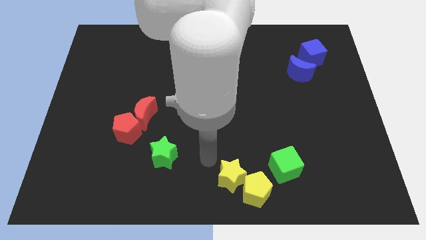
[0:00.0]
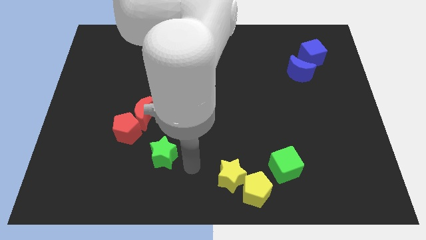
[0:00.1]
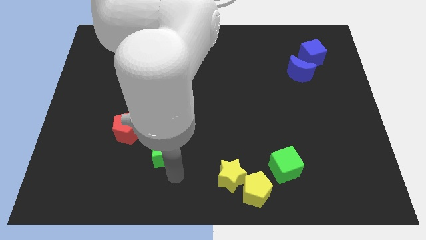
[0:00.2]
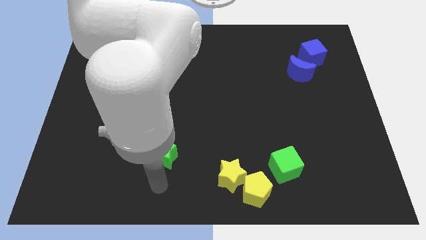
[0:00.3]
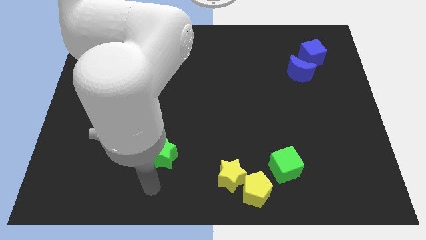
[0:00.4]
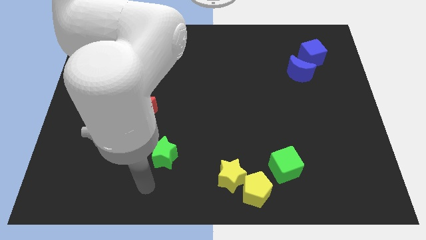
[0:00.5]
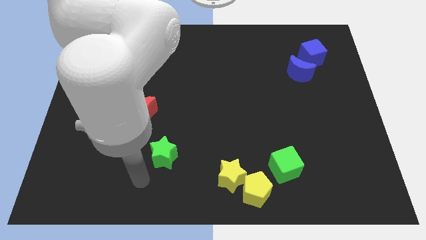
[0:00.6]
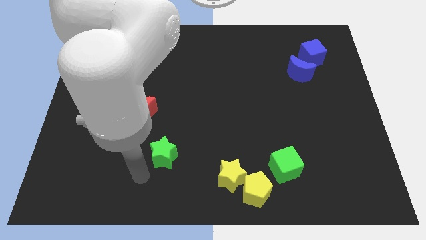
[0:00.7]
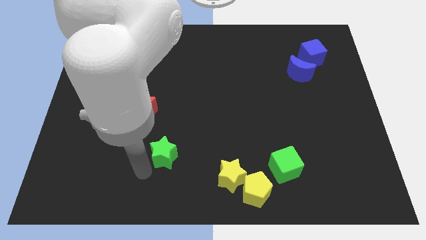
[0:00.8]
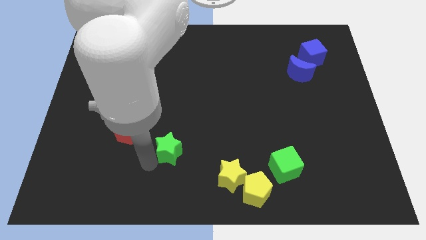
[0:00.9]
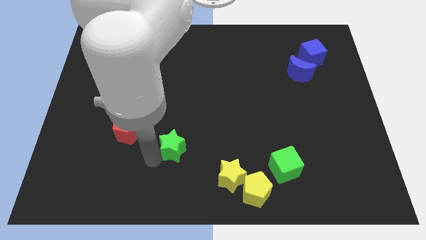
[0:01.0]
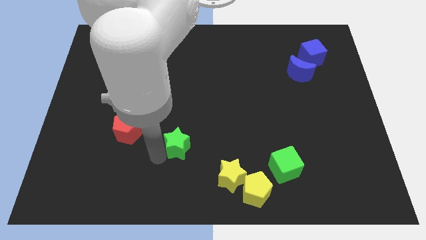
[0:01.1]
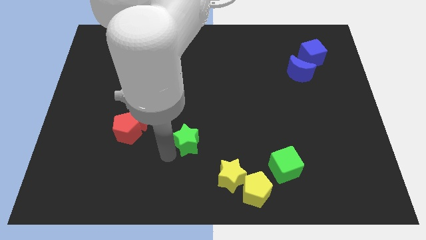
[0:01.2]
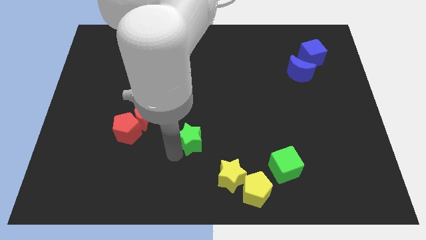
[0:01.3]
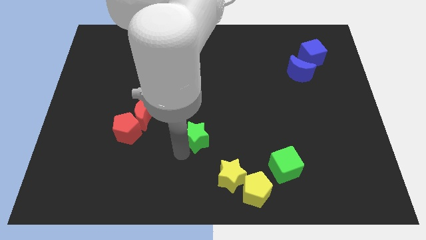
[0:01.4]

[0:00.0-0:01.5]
put the green star between the yellow star and red moon

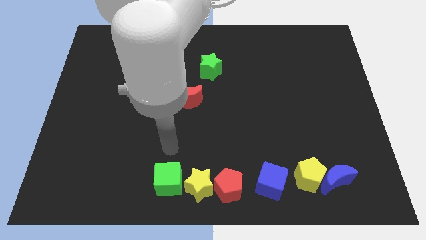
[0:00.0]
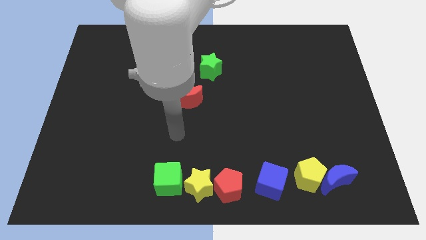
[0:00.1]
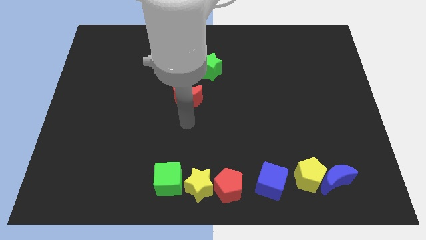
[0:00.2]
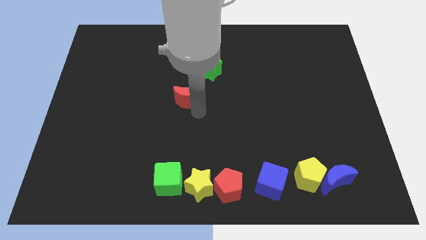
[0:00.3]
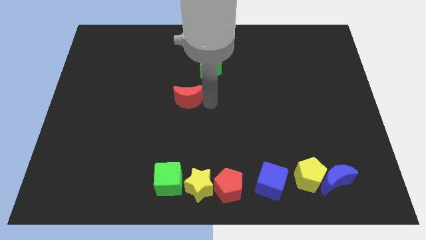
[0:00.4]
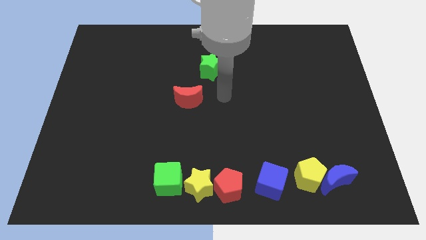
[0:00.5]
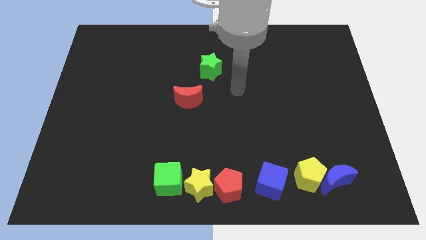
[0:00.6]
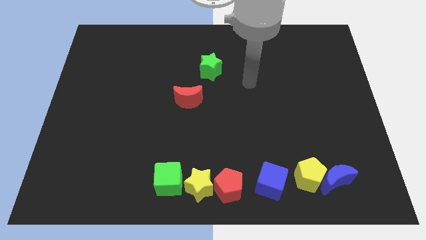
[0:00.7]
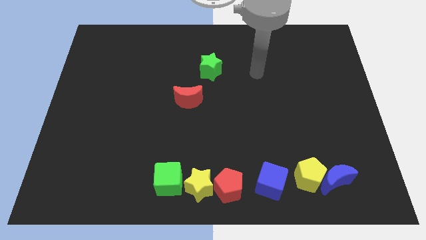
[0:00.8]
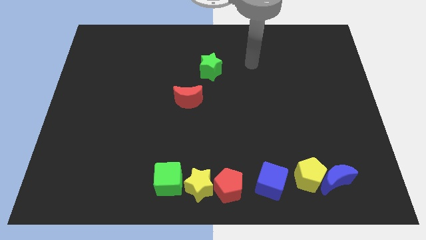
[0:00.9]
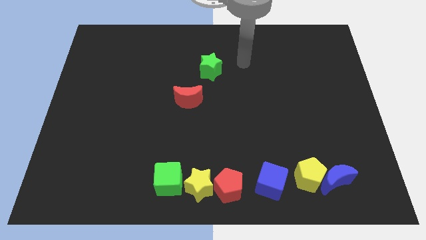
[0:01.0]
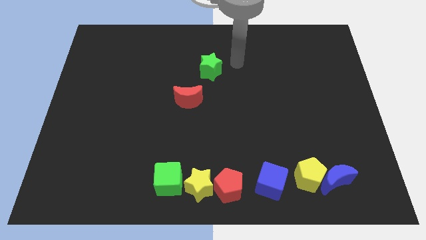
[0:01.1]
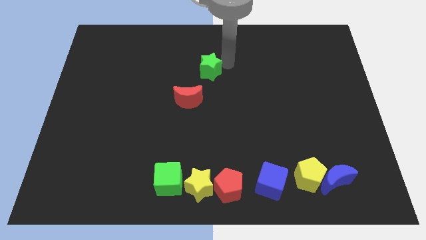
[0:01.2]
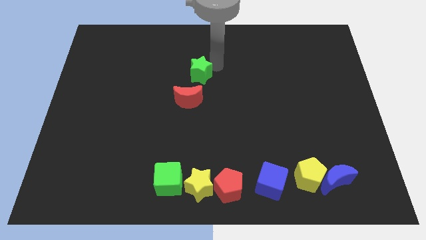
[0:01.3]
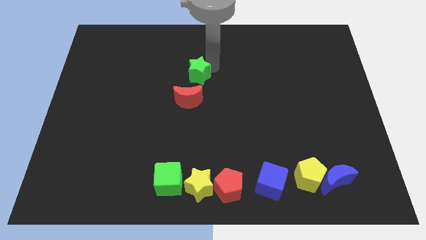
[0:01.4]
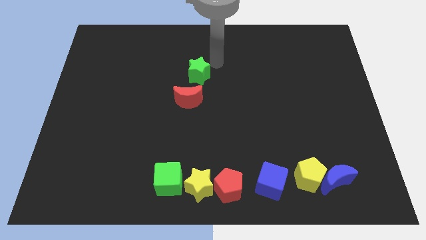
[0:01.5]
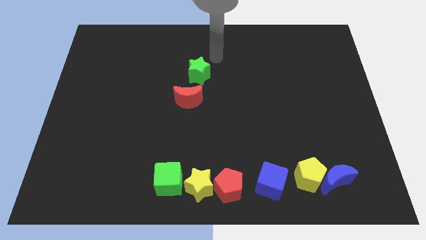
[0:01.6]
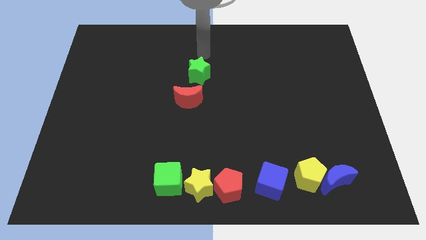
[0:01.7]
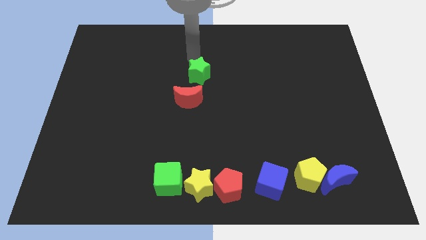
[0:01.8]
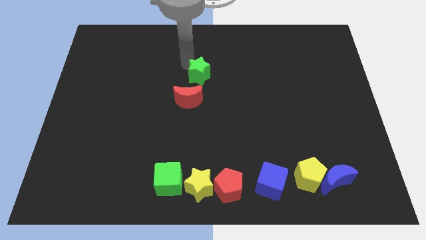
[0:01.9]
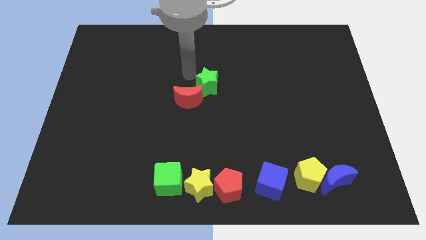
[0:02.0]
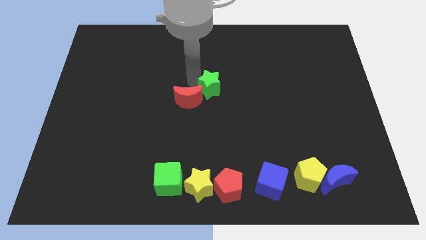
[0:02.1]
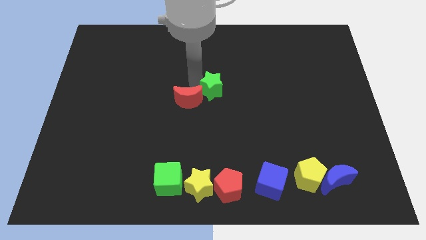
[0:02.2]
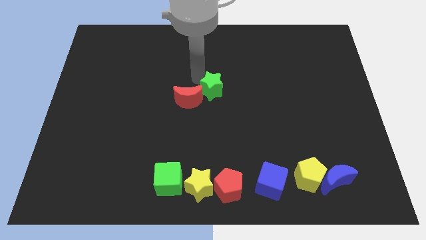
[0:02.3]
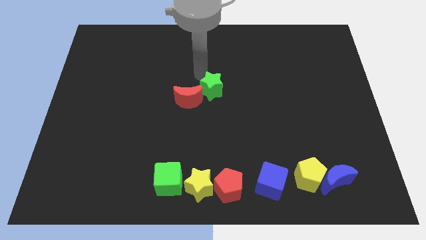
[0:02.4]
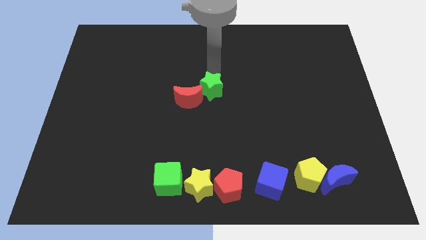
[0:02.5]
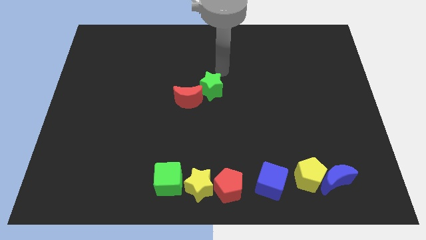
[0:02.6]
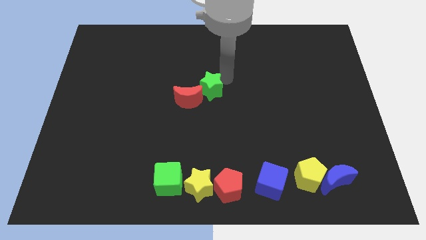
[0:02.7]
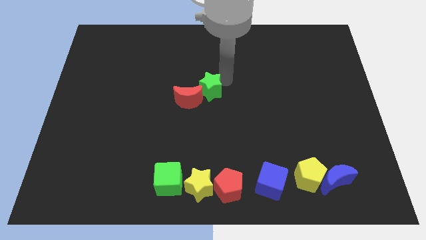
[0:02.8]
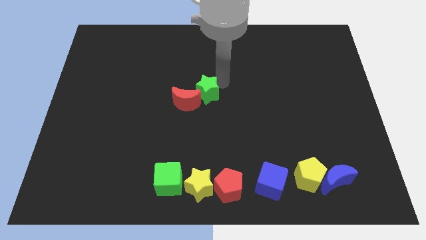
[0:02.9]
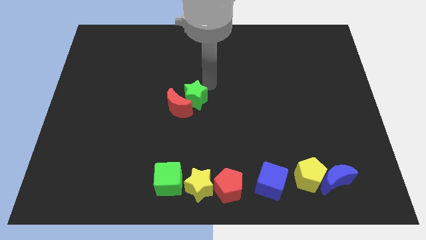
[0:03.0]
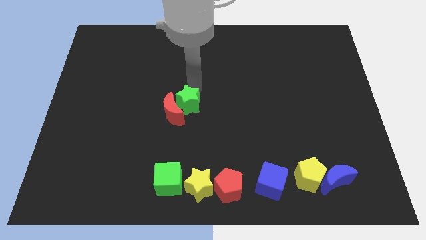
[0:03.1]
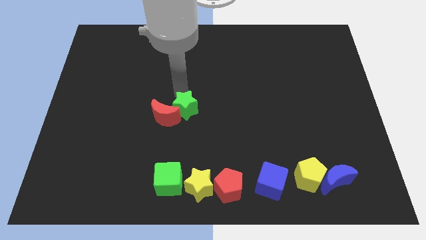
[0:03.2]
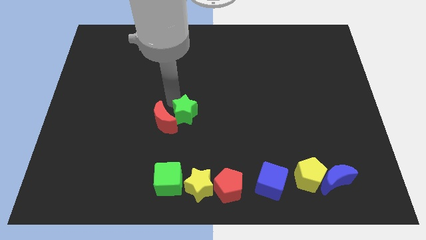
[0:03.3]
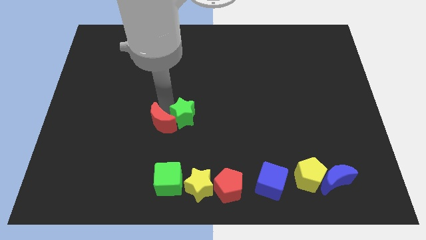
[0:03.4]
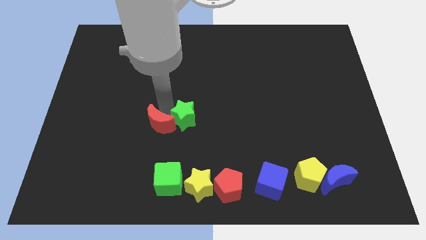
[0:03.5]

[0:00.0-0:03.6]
push the green star into red crescent

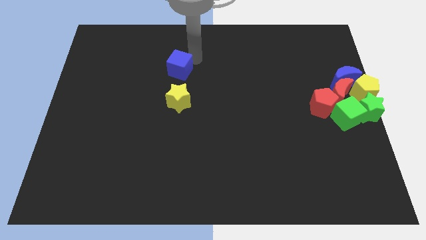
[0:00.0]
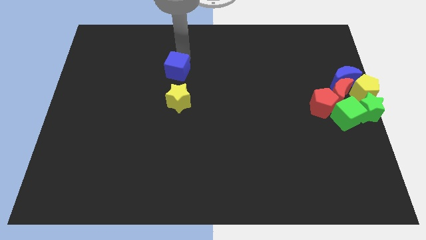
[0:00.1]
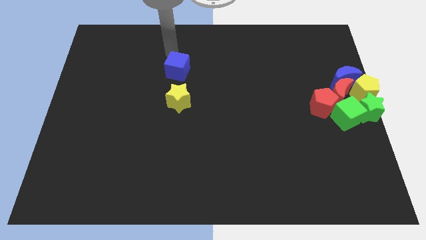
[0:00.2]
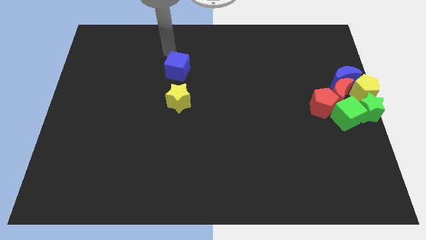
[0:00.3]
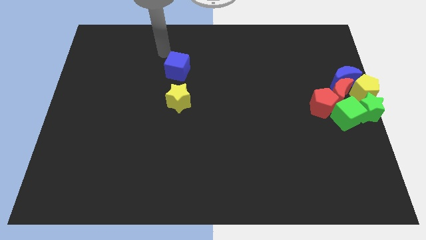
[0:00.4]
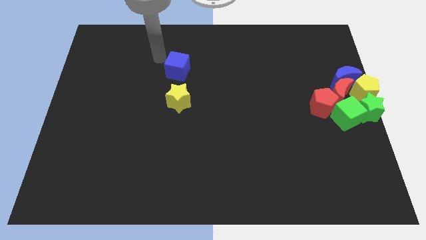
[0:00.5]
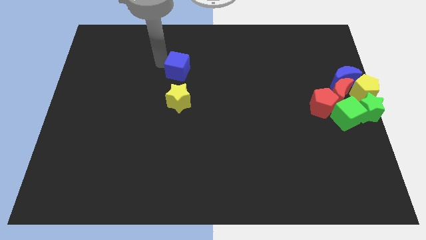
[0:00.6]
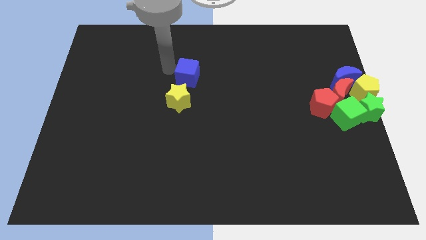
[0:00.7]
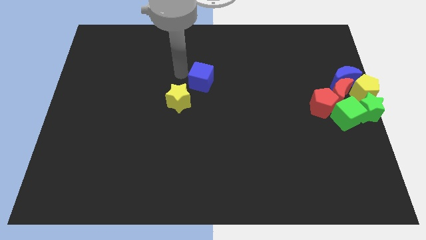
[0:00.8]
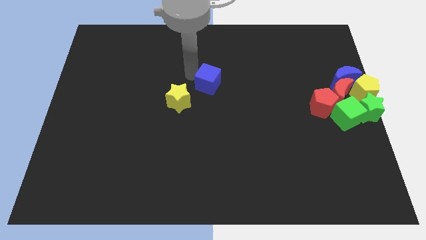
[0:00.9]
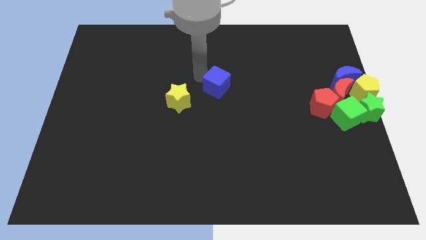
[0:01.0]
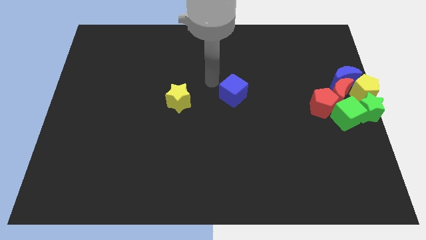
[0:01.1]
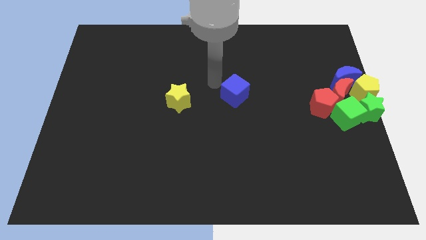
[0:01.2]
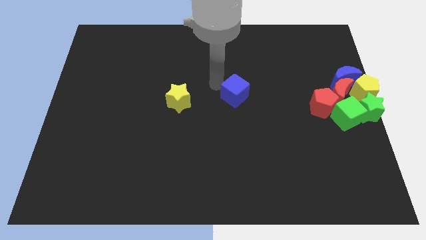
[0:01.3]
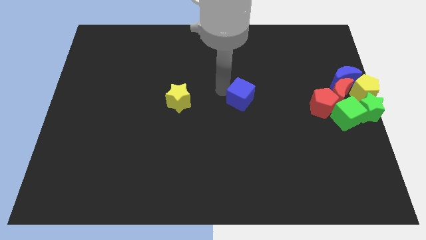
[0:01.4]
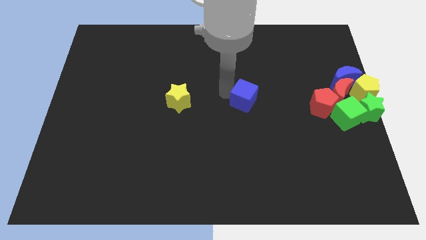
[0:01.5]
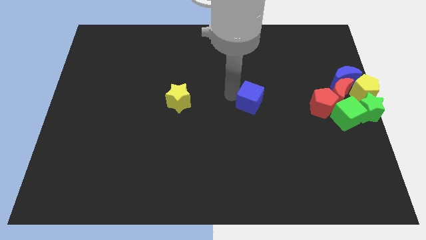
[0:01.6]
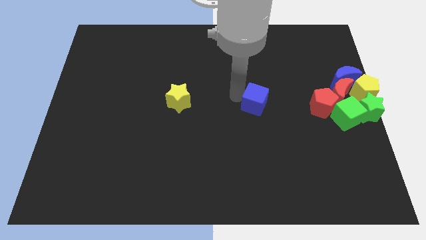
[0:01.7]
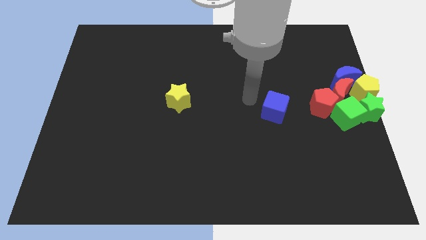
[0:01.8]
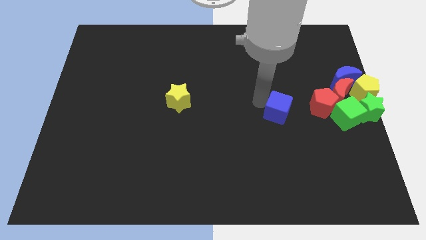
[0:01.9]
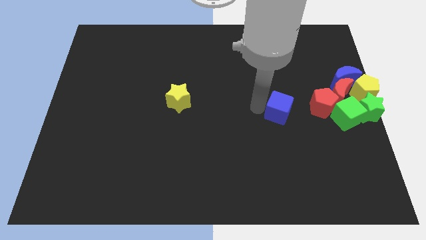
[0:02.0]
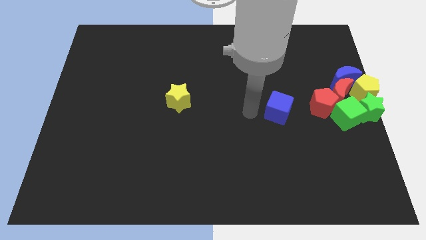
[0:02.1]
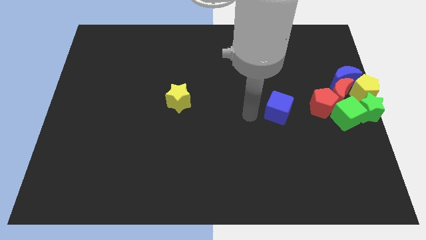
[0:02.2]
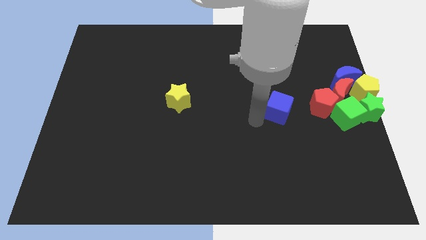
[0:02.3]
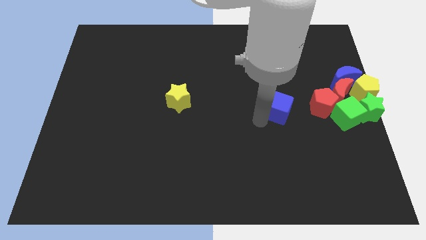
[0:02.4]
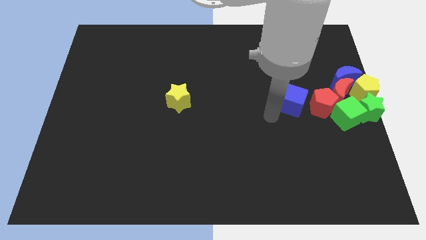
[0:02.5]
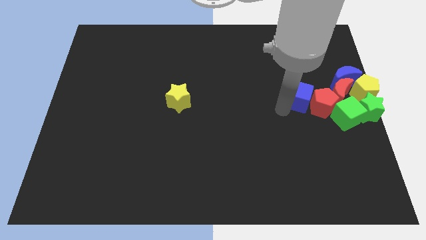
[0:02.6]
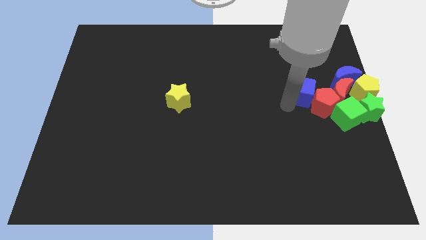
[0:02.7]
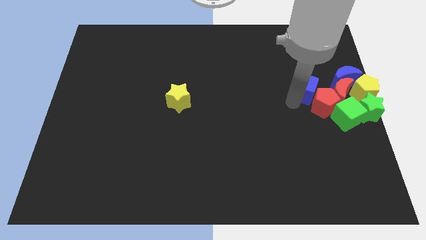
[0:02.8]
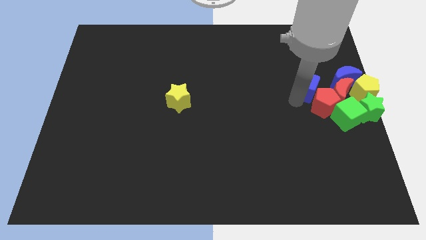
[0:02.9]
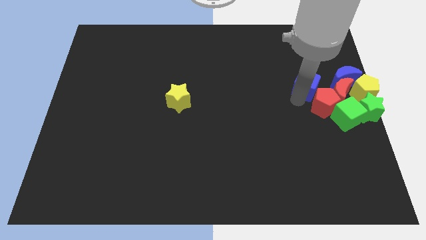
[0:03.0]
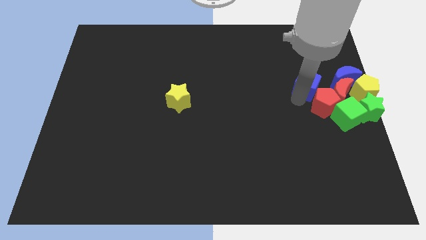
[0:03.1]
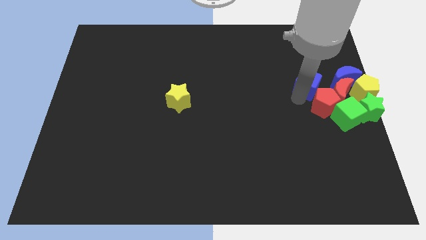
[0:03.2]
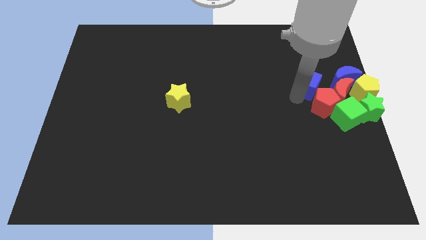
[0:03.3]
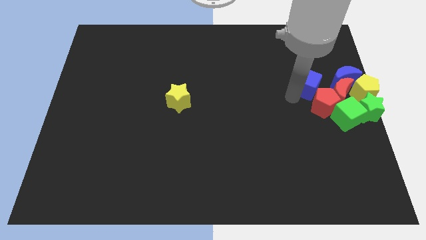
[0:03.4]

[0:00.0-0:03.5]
push the blue cube into red pentagon

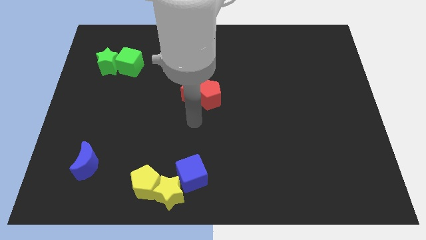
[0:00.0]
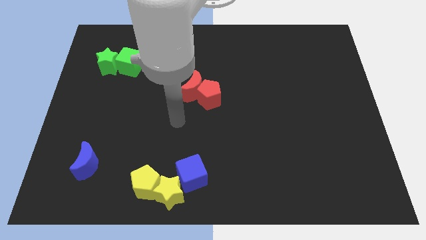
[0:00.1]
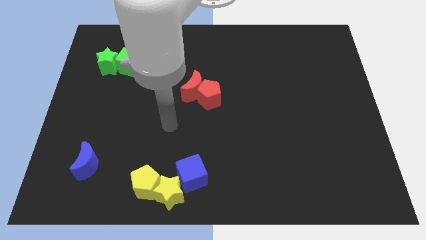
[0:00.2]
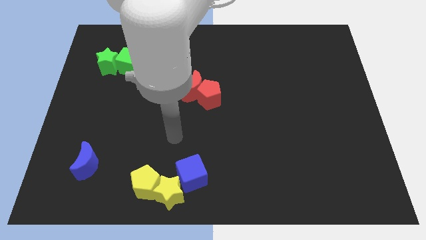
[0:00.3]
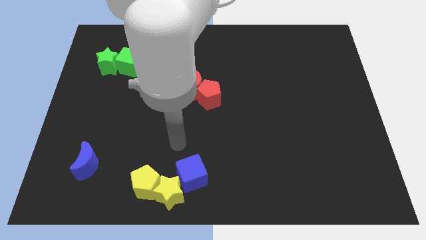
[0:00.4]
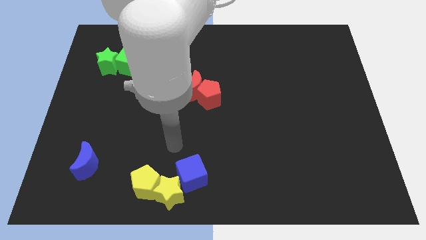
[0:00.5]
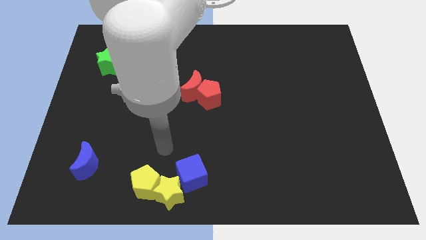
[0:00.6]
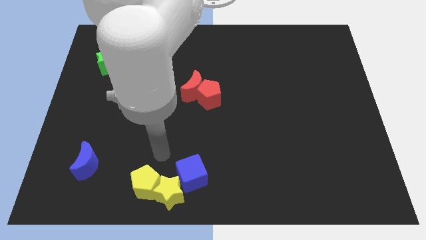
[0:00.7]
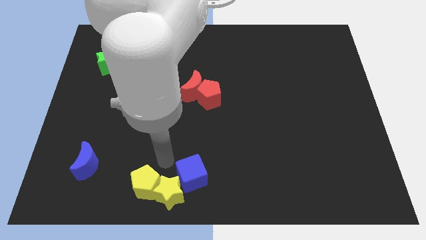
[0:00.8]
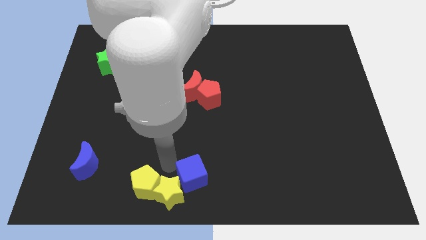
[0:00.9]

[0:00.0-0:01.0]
place your hand above the yellow star
